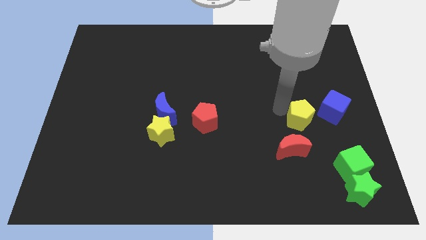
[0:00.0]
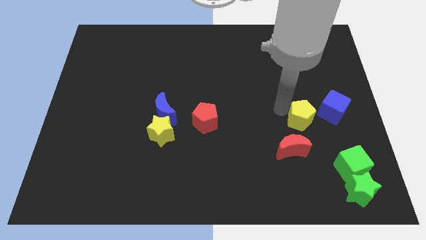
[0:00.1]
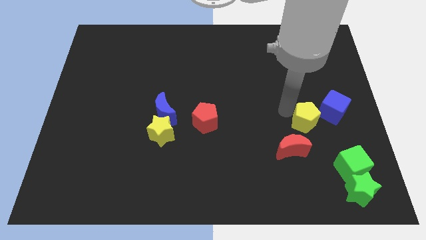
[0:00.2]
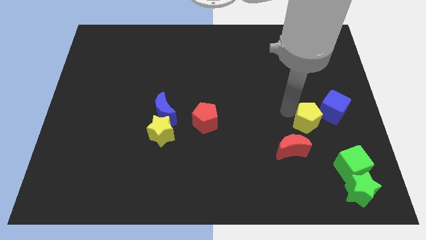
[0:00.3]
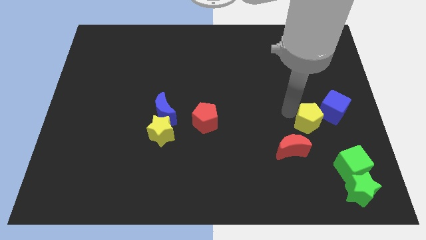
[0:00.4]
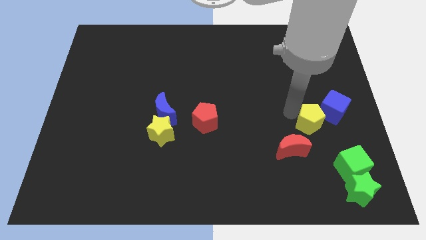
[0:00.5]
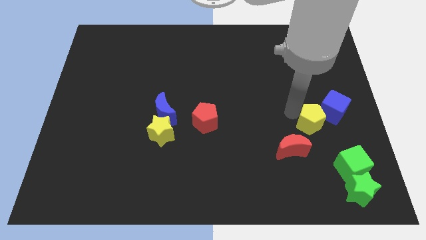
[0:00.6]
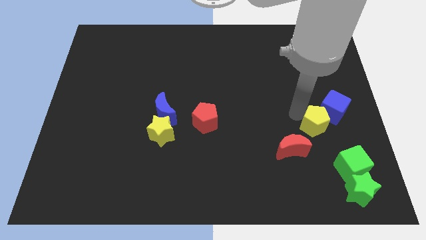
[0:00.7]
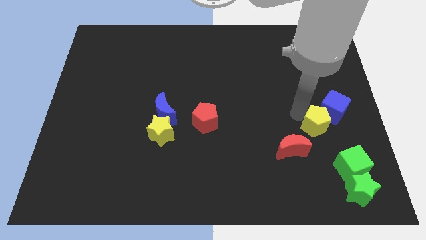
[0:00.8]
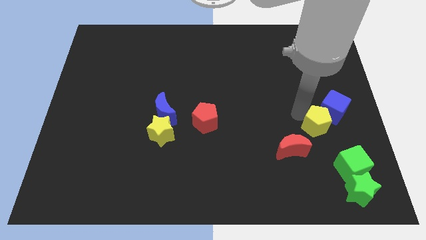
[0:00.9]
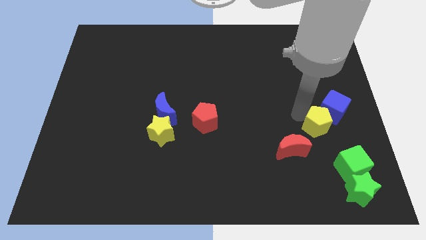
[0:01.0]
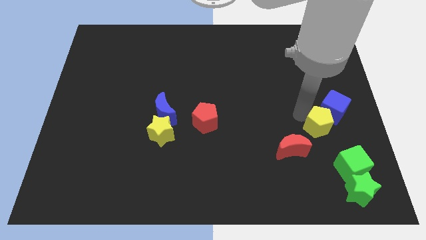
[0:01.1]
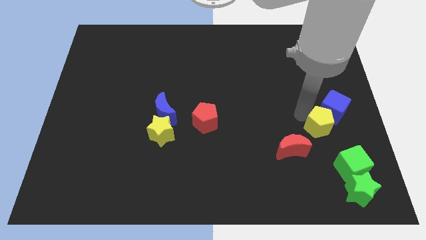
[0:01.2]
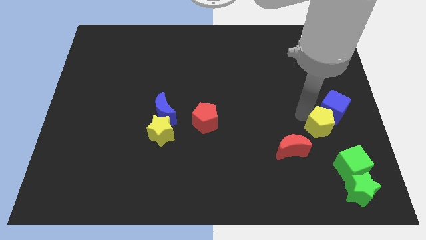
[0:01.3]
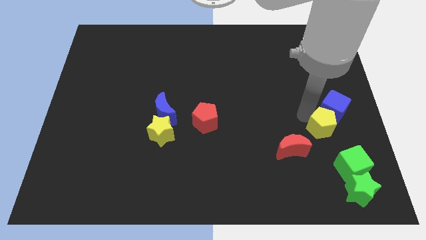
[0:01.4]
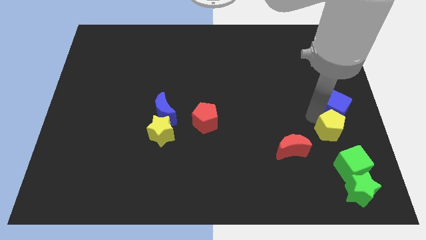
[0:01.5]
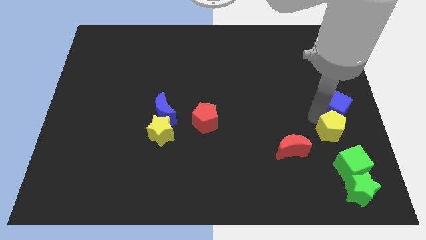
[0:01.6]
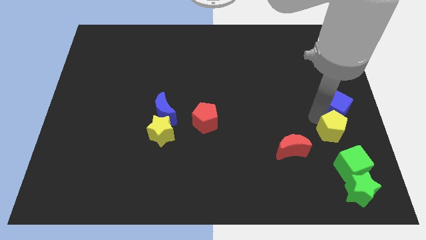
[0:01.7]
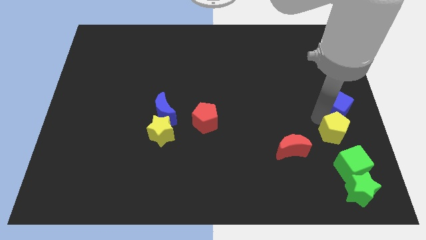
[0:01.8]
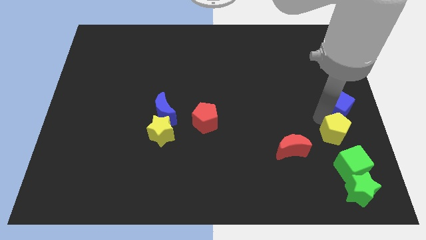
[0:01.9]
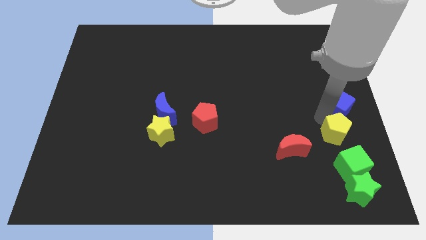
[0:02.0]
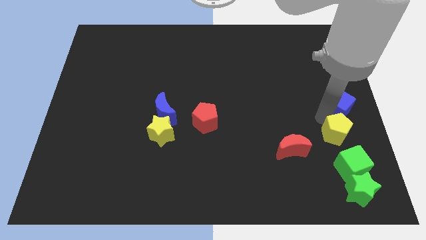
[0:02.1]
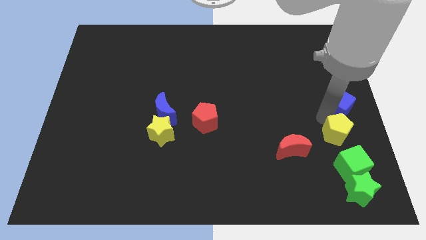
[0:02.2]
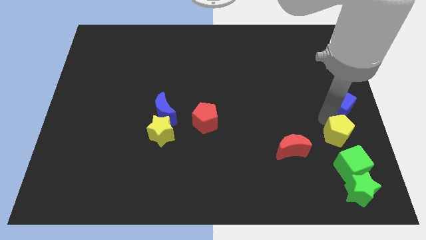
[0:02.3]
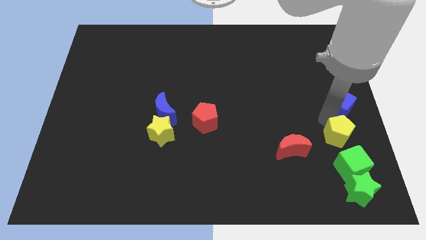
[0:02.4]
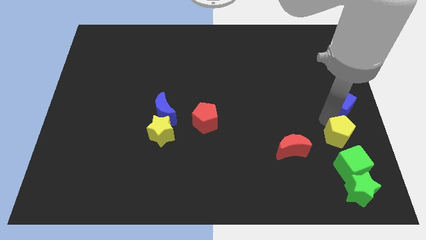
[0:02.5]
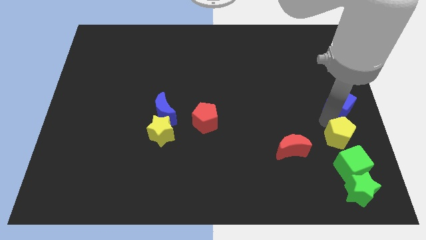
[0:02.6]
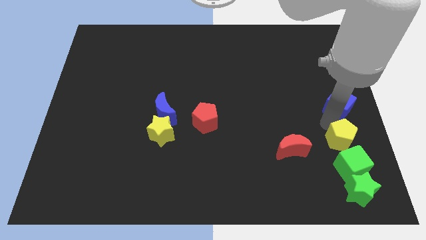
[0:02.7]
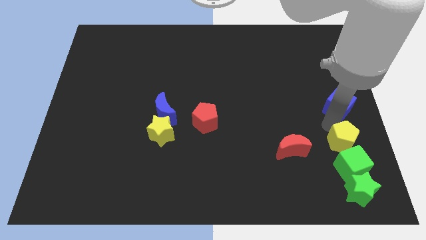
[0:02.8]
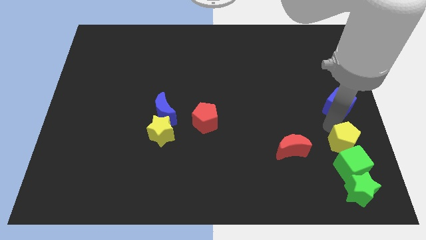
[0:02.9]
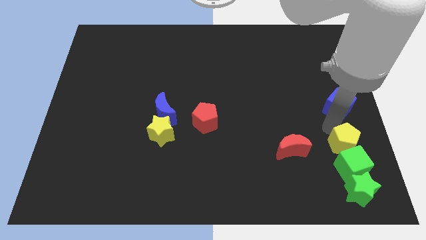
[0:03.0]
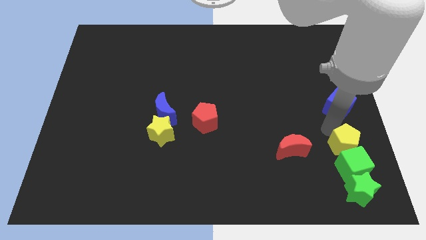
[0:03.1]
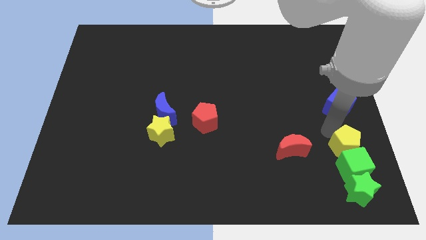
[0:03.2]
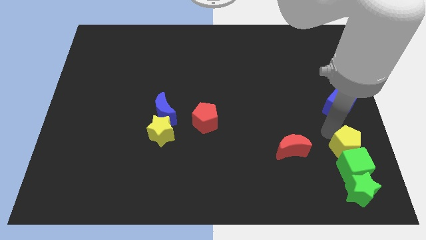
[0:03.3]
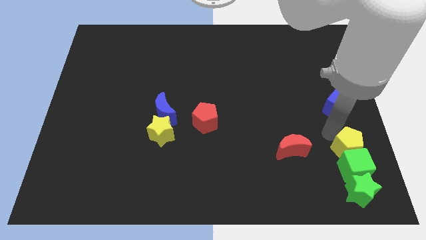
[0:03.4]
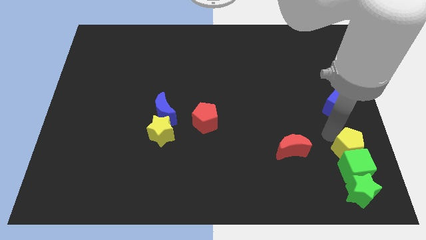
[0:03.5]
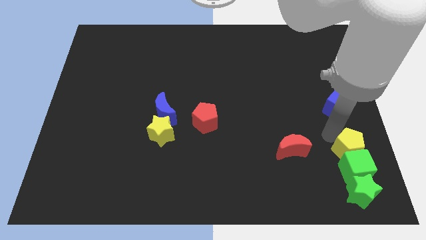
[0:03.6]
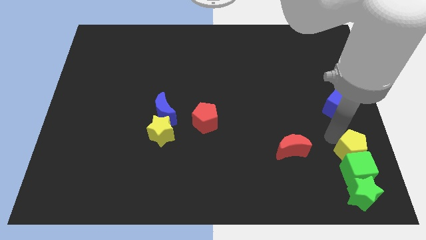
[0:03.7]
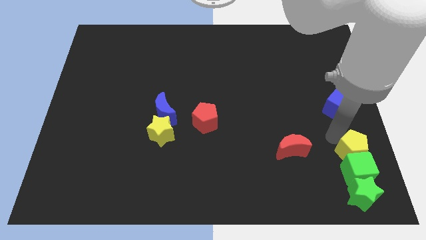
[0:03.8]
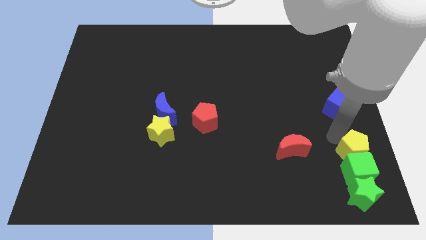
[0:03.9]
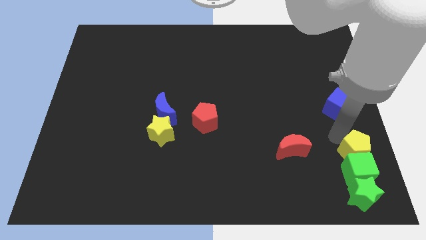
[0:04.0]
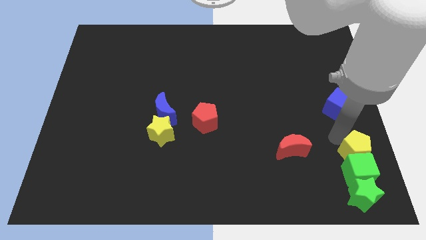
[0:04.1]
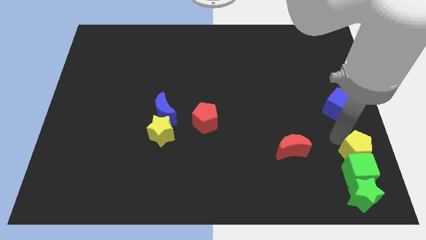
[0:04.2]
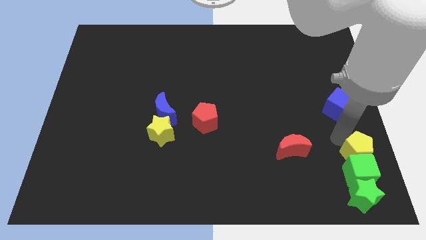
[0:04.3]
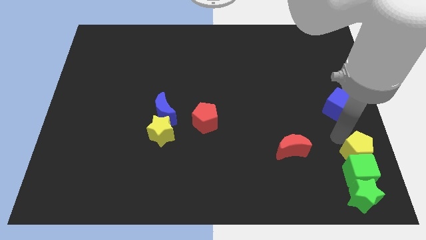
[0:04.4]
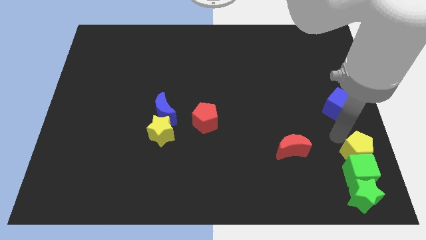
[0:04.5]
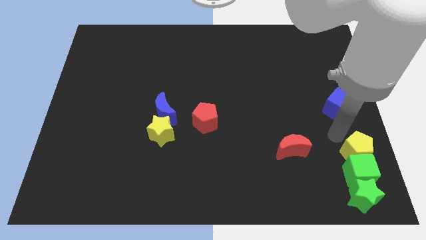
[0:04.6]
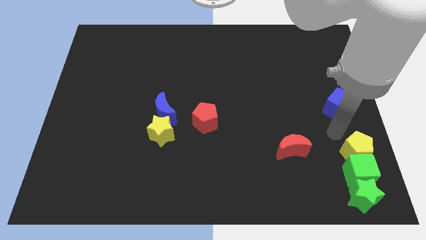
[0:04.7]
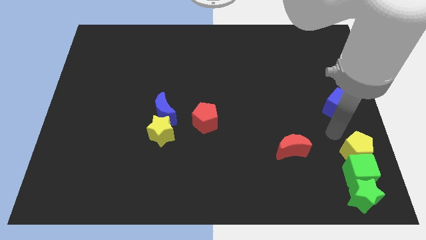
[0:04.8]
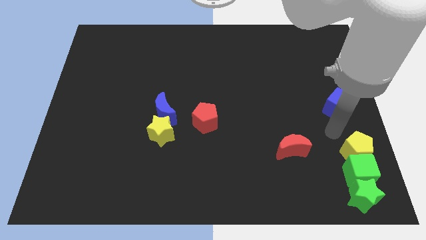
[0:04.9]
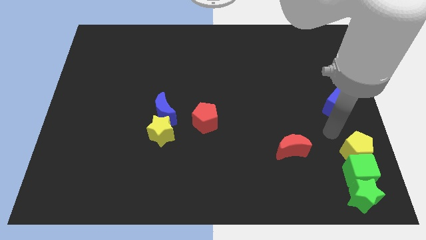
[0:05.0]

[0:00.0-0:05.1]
move the yellow pentagon into the green cube

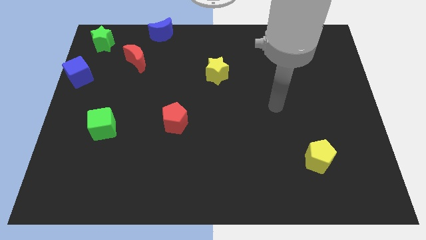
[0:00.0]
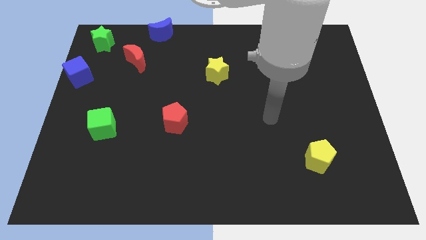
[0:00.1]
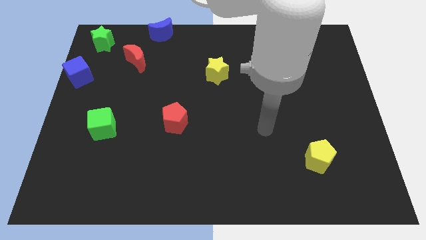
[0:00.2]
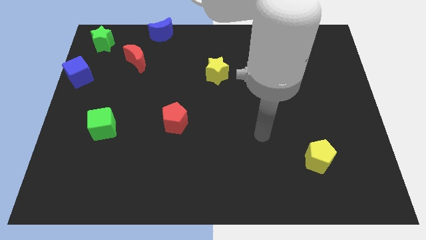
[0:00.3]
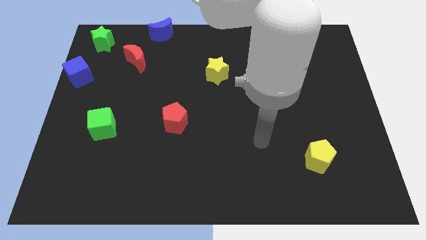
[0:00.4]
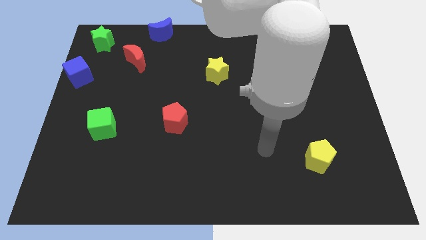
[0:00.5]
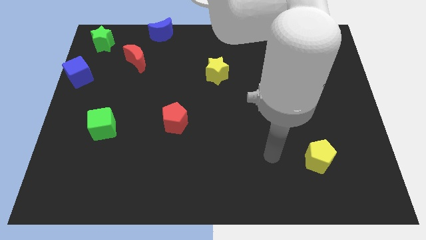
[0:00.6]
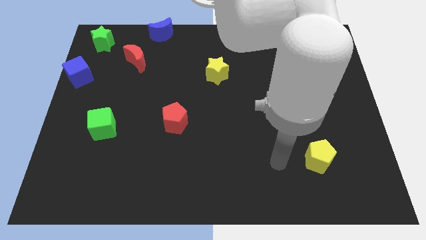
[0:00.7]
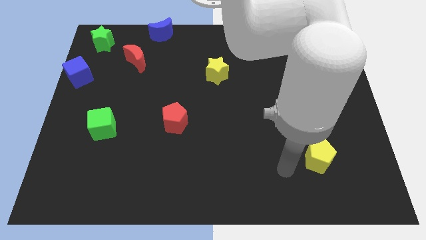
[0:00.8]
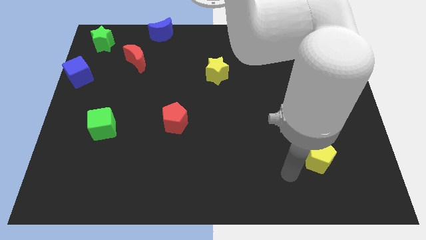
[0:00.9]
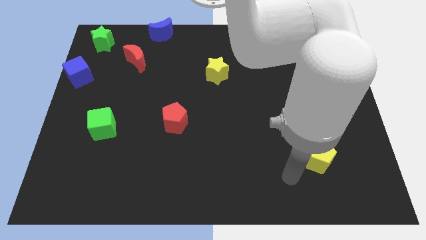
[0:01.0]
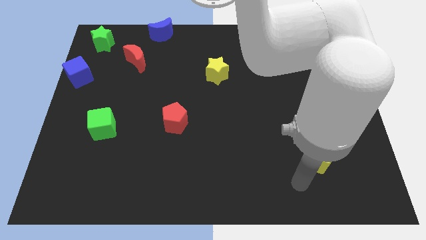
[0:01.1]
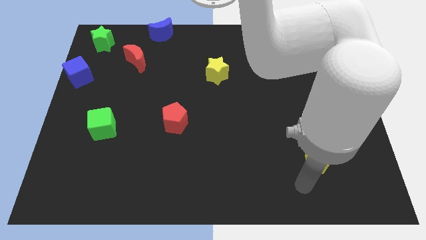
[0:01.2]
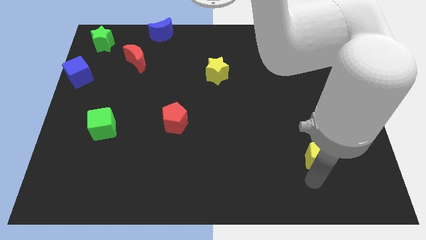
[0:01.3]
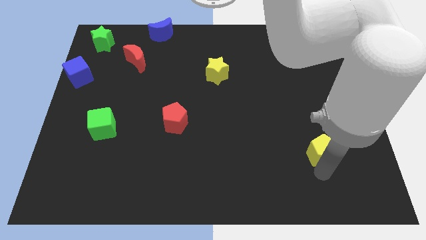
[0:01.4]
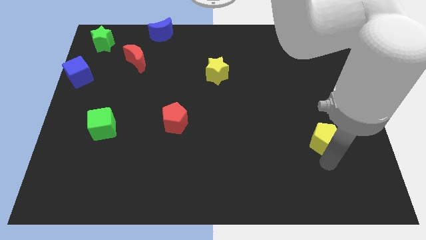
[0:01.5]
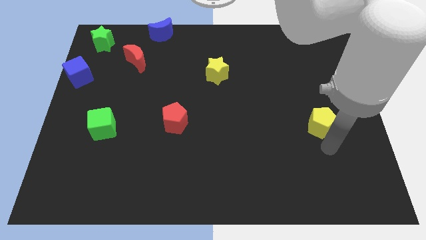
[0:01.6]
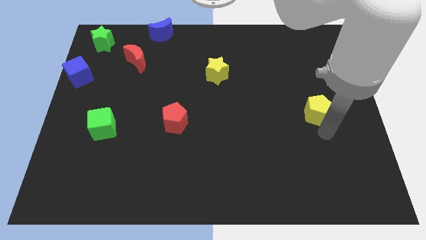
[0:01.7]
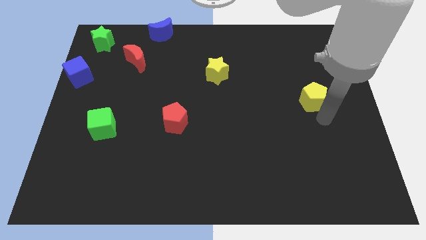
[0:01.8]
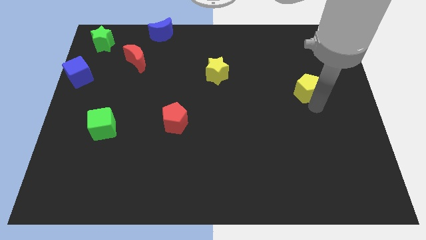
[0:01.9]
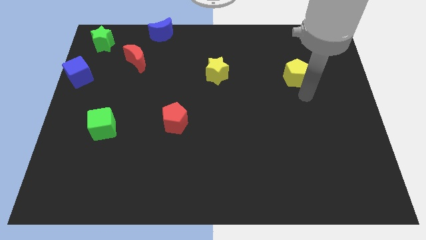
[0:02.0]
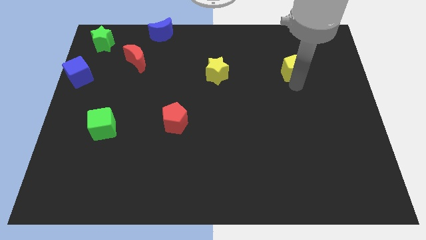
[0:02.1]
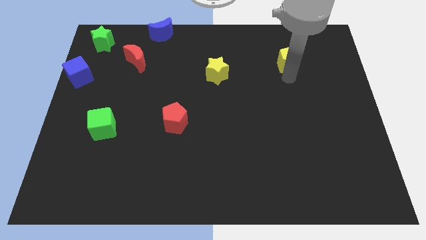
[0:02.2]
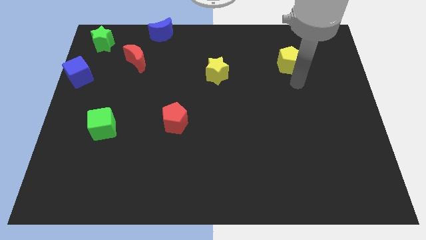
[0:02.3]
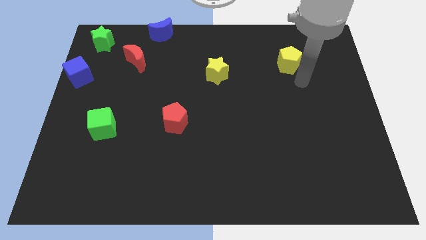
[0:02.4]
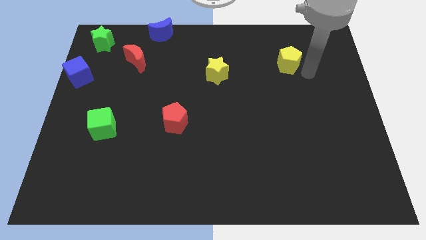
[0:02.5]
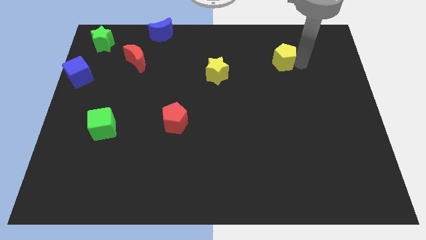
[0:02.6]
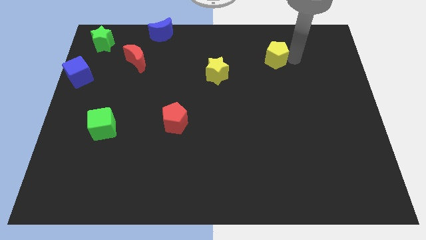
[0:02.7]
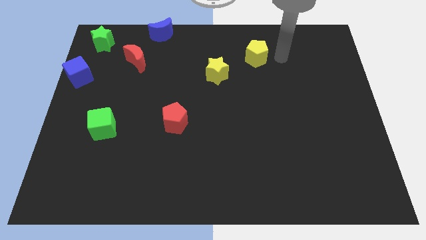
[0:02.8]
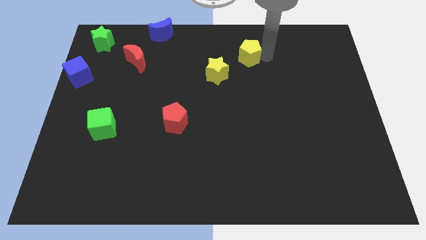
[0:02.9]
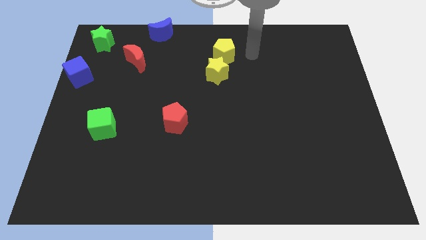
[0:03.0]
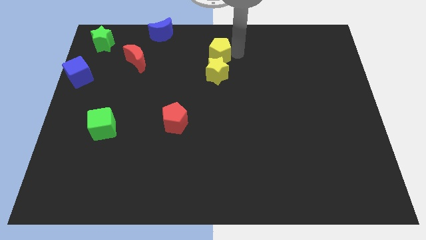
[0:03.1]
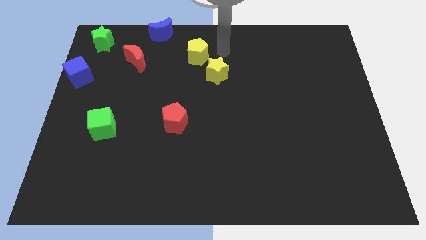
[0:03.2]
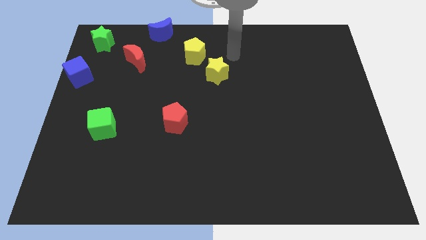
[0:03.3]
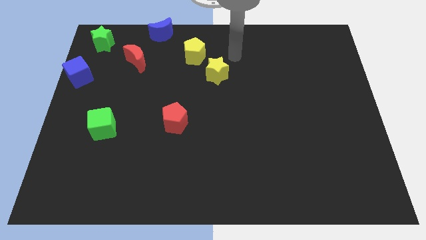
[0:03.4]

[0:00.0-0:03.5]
place the yellow pentagon in between the blue cube and the yellow star

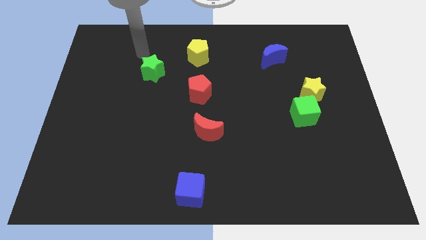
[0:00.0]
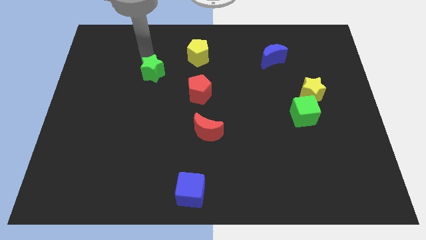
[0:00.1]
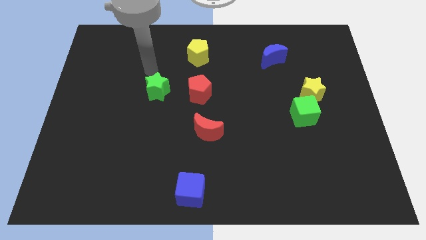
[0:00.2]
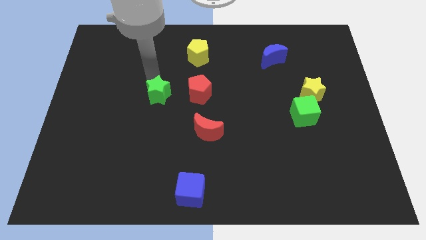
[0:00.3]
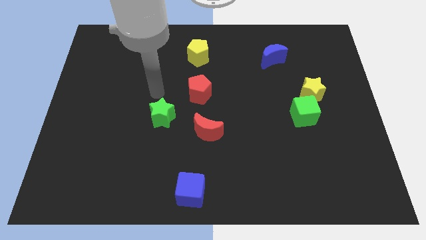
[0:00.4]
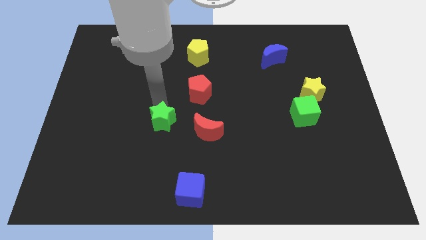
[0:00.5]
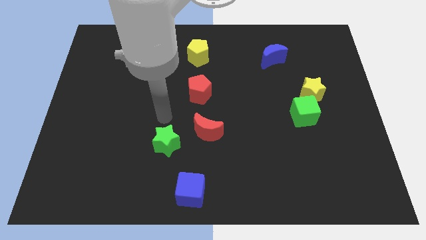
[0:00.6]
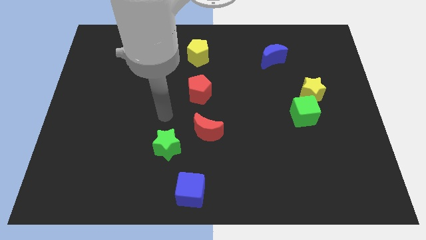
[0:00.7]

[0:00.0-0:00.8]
place green star above the blue cube
